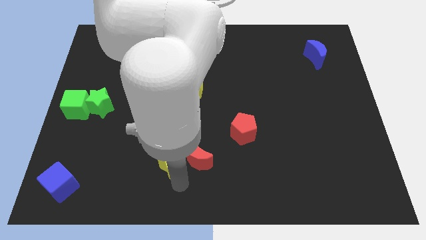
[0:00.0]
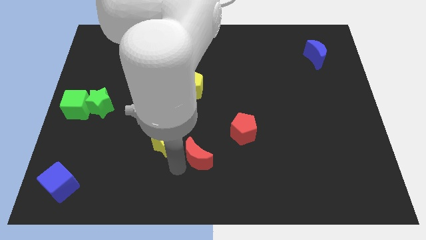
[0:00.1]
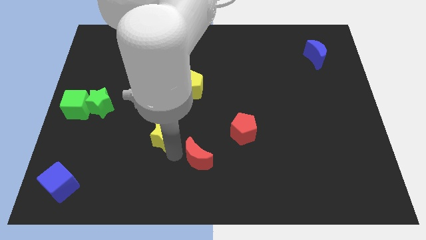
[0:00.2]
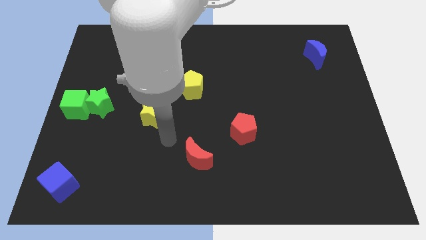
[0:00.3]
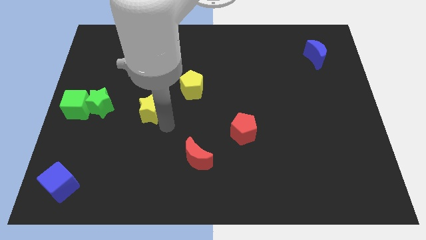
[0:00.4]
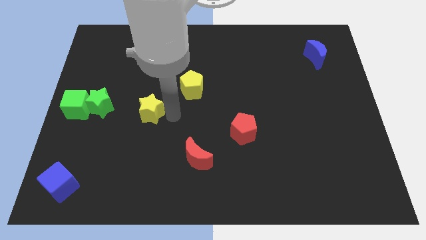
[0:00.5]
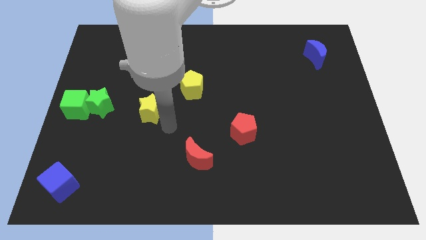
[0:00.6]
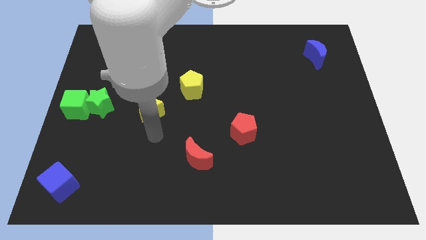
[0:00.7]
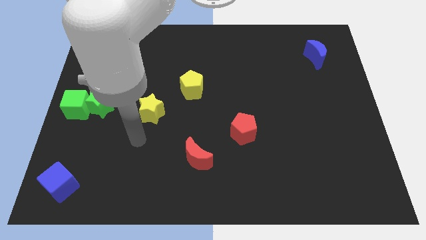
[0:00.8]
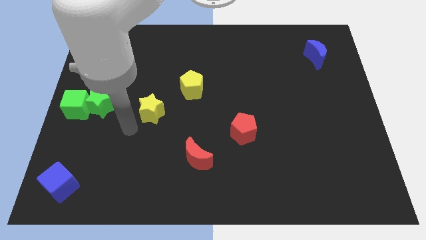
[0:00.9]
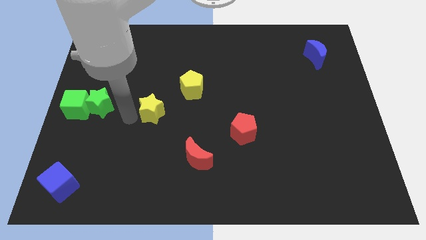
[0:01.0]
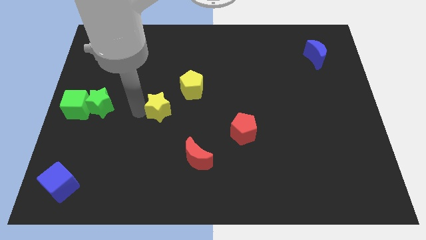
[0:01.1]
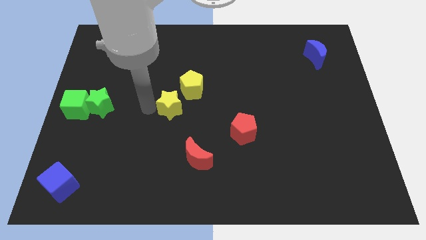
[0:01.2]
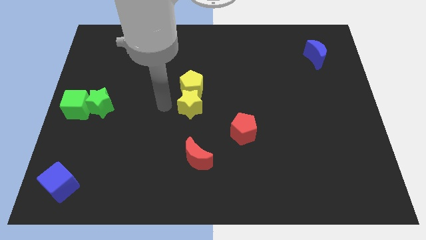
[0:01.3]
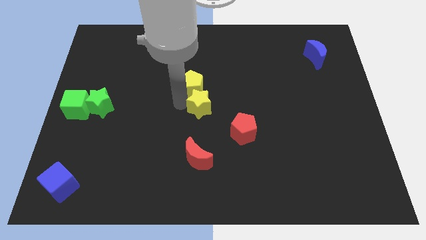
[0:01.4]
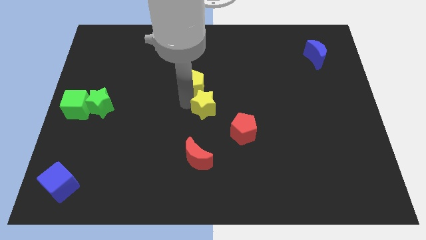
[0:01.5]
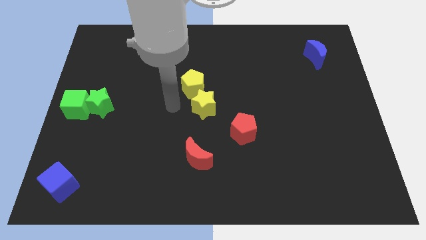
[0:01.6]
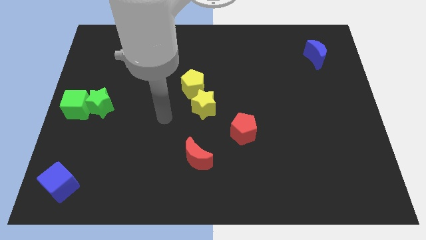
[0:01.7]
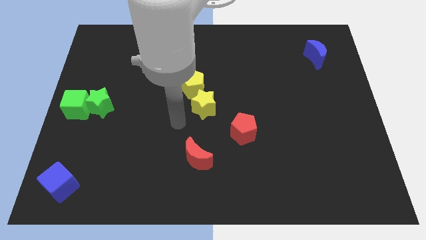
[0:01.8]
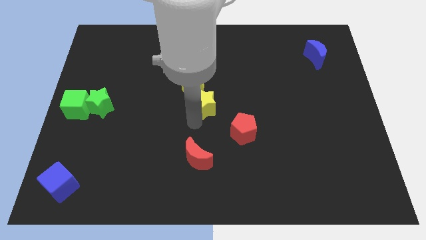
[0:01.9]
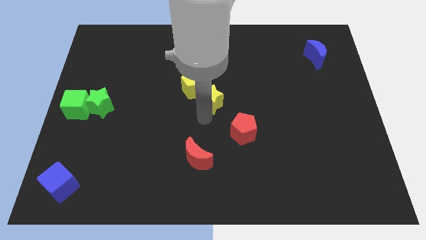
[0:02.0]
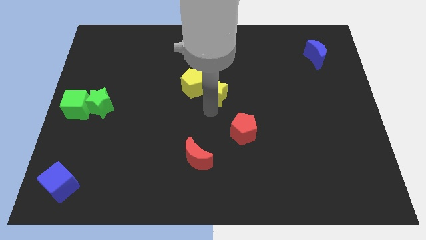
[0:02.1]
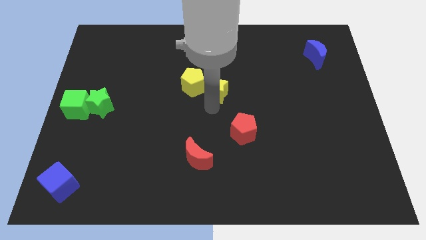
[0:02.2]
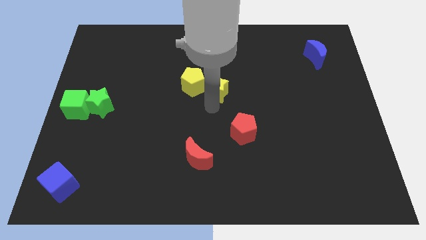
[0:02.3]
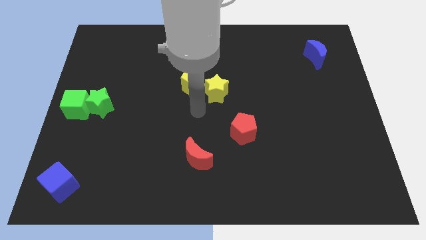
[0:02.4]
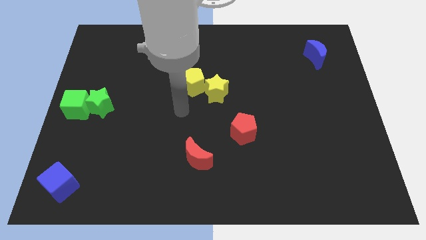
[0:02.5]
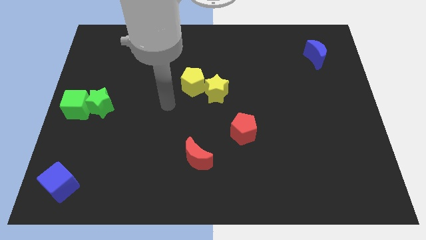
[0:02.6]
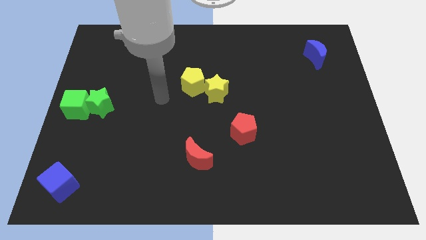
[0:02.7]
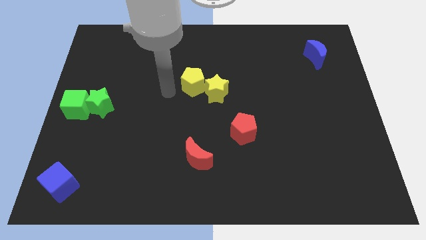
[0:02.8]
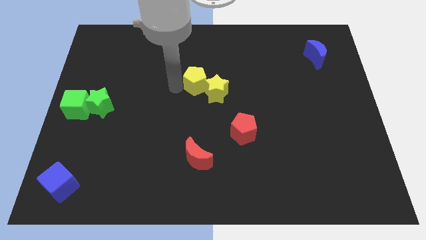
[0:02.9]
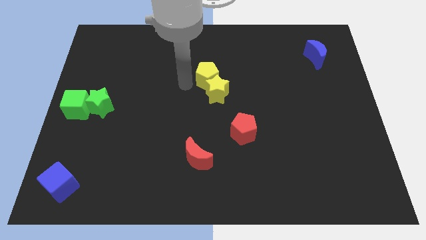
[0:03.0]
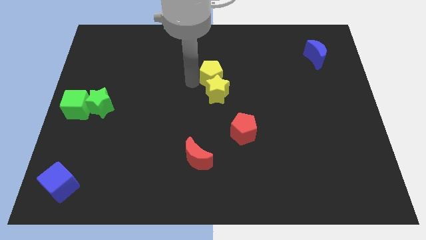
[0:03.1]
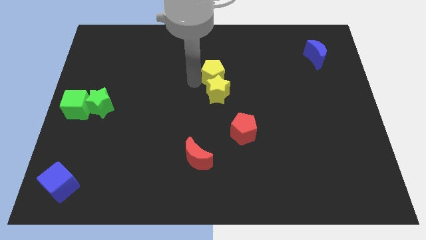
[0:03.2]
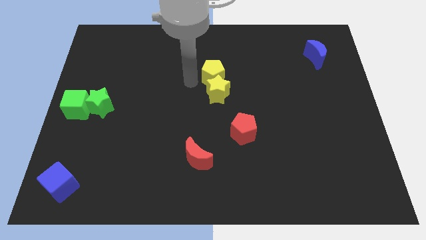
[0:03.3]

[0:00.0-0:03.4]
place the yellow blocks at the center of the board

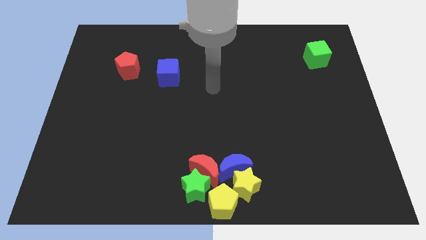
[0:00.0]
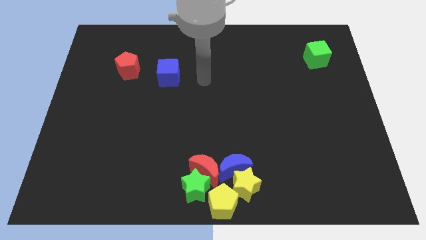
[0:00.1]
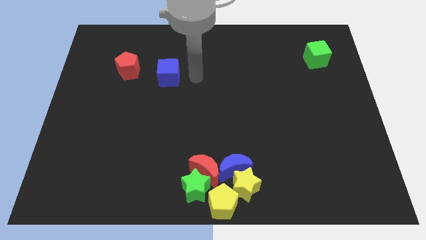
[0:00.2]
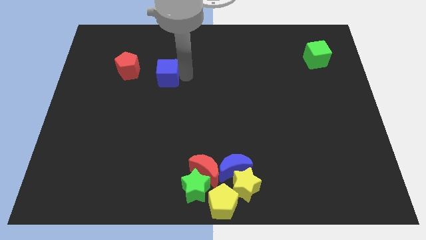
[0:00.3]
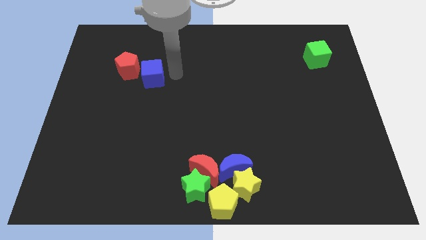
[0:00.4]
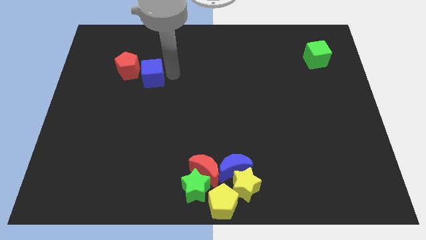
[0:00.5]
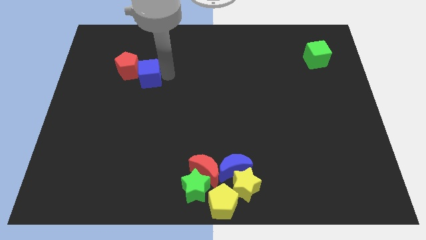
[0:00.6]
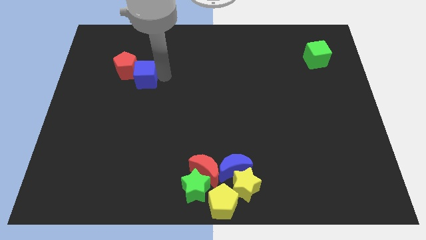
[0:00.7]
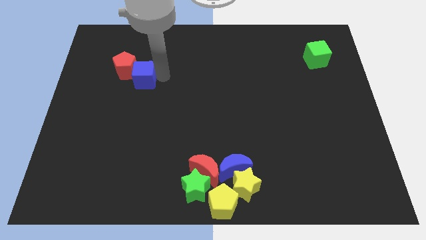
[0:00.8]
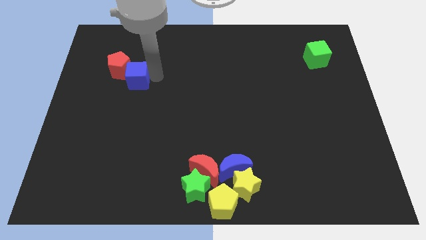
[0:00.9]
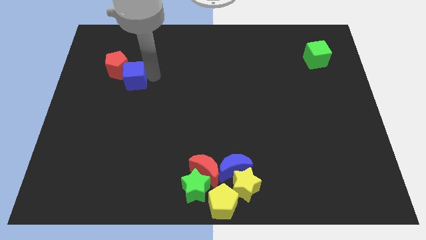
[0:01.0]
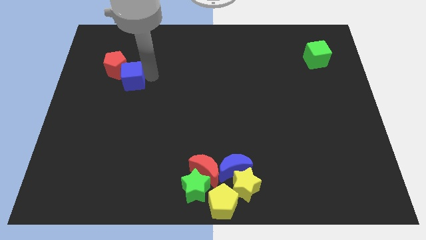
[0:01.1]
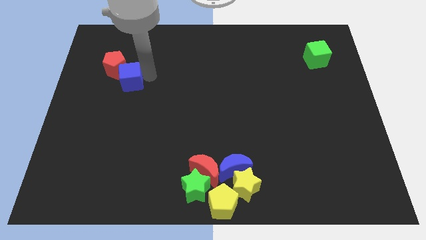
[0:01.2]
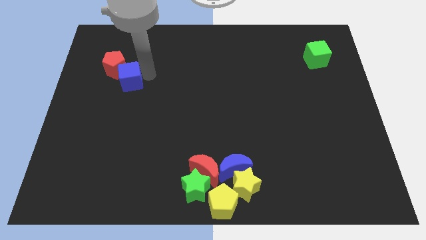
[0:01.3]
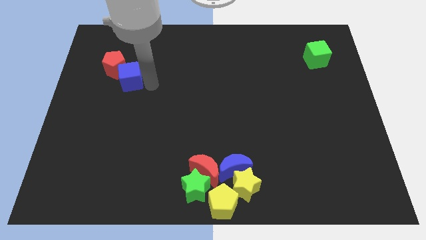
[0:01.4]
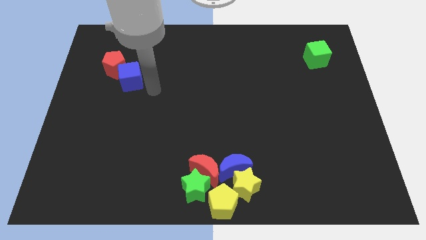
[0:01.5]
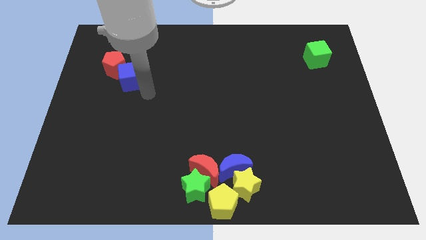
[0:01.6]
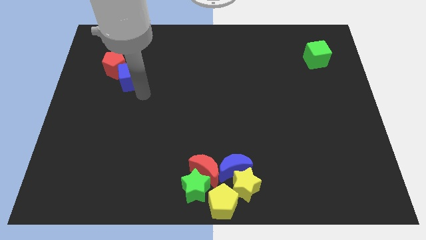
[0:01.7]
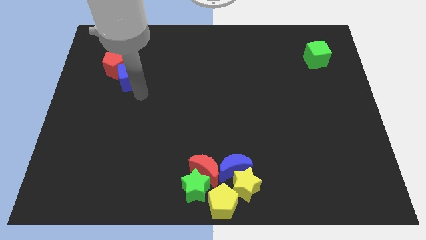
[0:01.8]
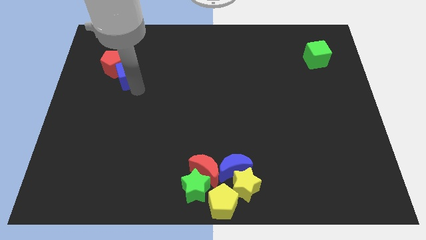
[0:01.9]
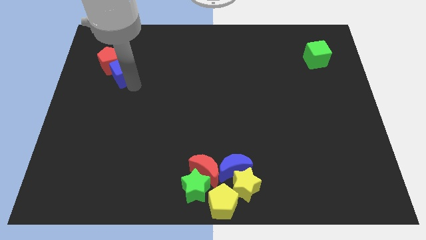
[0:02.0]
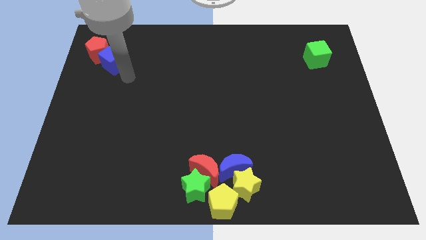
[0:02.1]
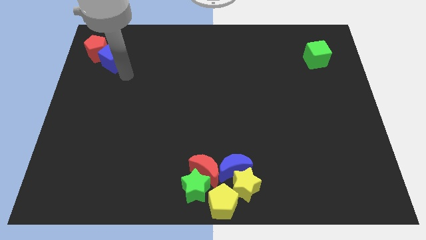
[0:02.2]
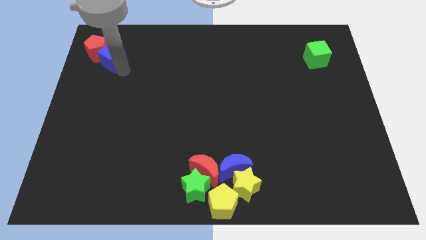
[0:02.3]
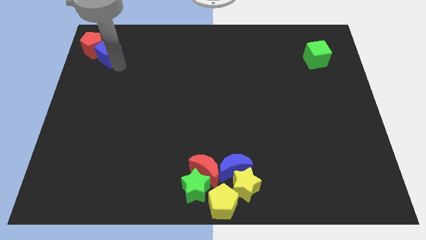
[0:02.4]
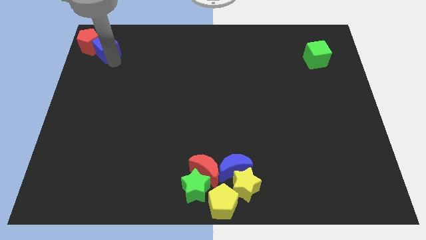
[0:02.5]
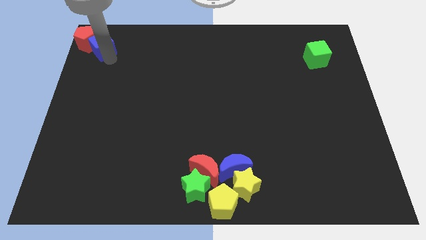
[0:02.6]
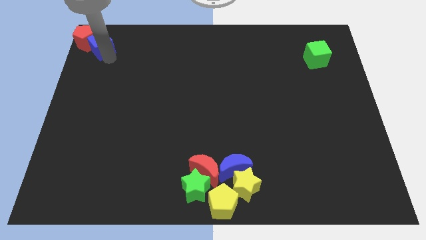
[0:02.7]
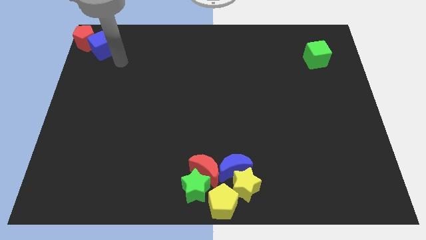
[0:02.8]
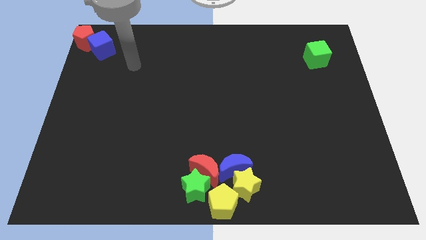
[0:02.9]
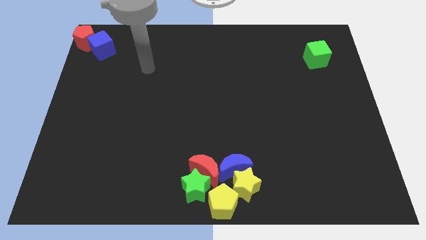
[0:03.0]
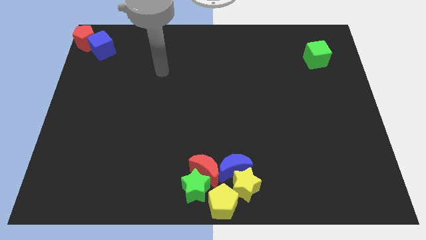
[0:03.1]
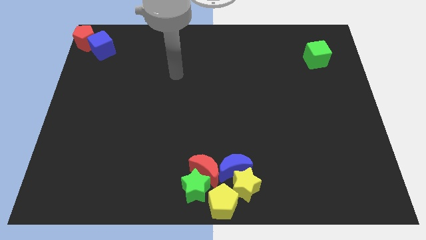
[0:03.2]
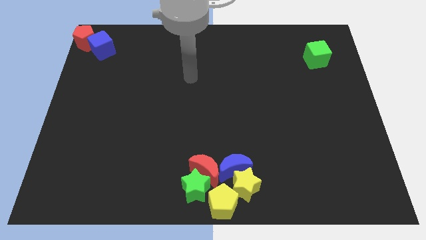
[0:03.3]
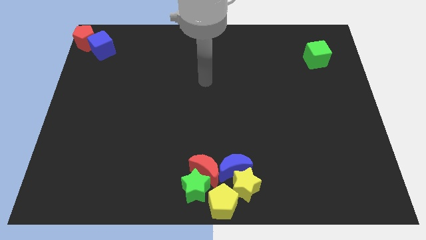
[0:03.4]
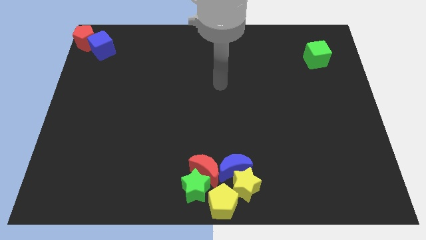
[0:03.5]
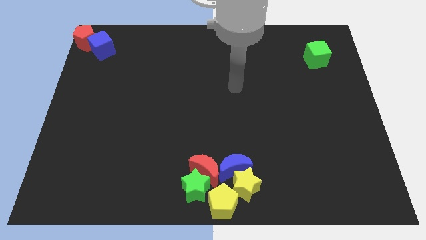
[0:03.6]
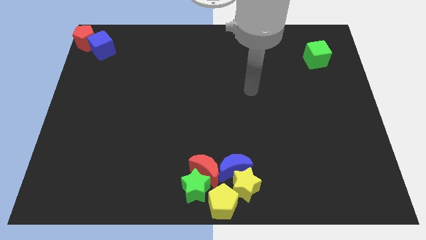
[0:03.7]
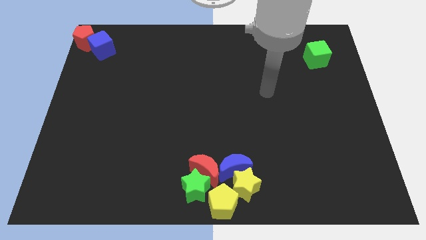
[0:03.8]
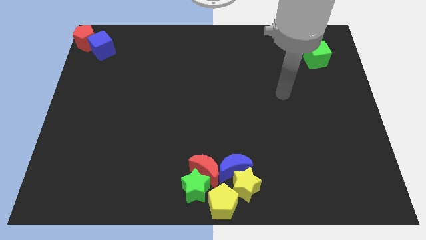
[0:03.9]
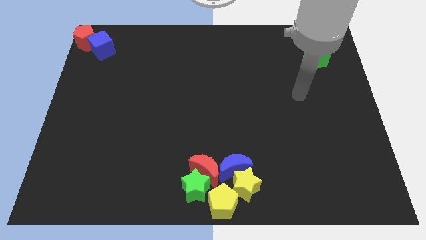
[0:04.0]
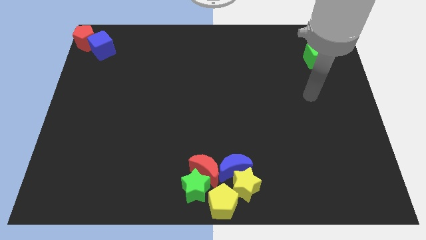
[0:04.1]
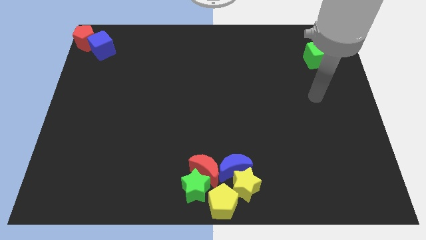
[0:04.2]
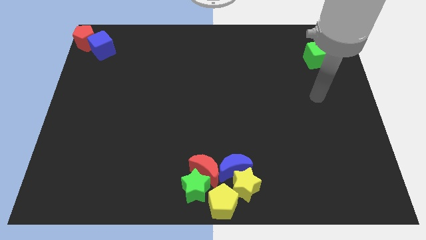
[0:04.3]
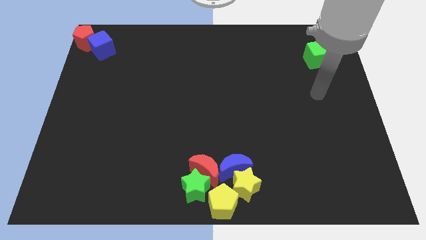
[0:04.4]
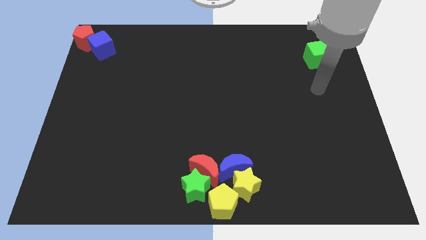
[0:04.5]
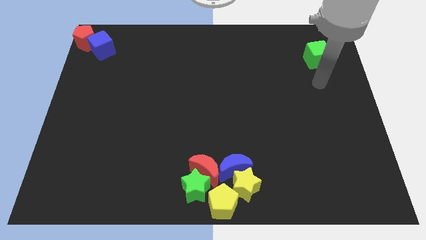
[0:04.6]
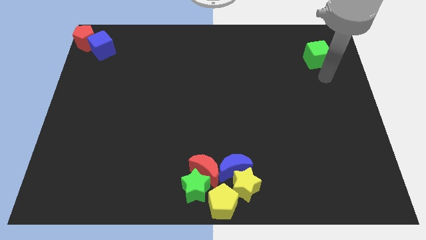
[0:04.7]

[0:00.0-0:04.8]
push the blue cube along with red pentagon to top left corner

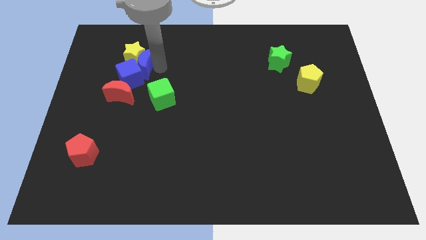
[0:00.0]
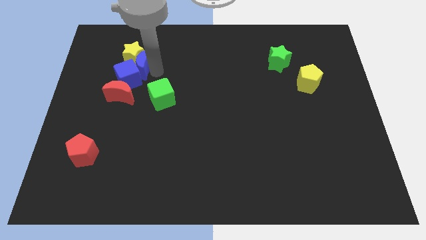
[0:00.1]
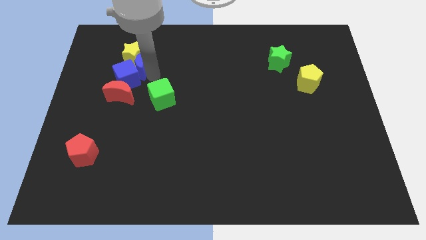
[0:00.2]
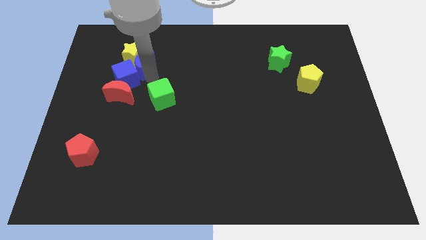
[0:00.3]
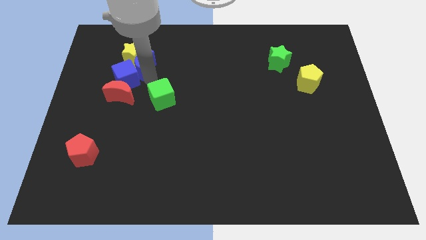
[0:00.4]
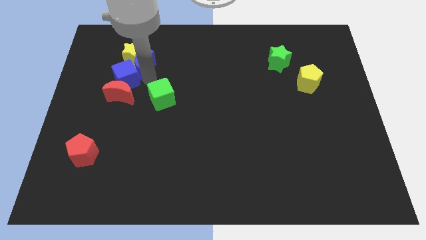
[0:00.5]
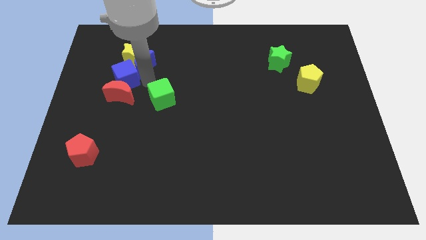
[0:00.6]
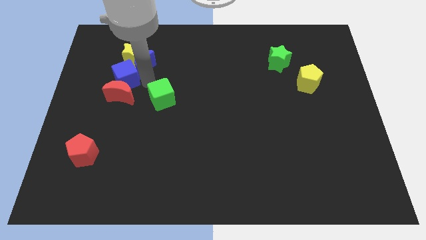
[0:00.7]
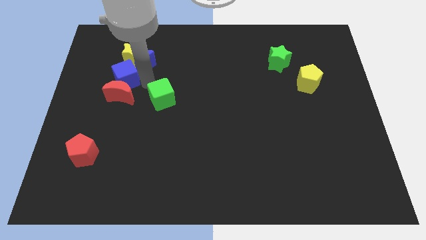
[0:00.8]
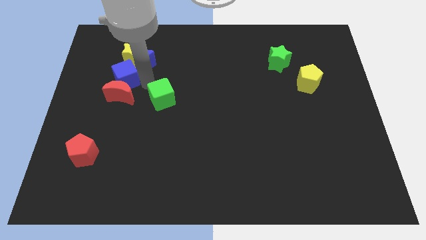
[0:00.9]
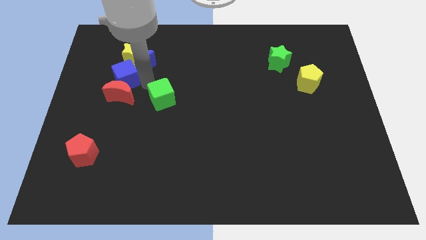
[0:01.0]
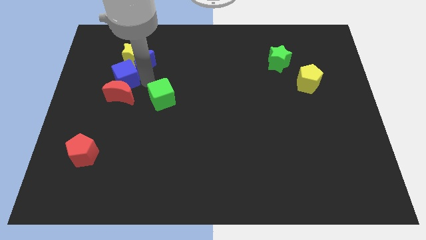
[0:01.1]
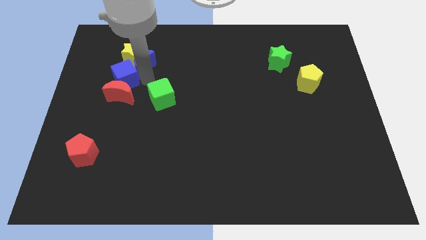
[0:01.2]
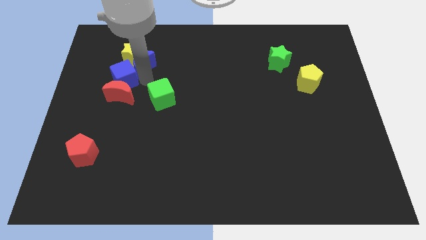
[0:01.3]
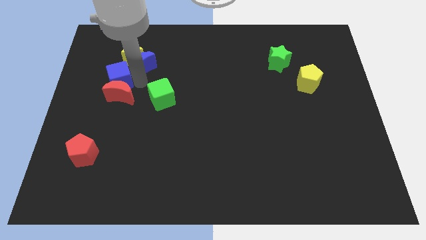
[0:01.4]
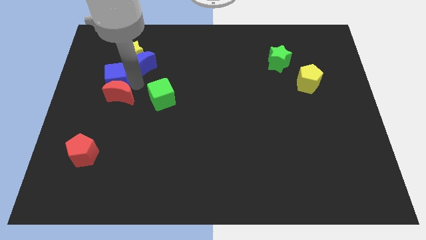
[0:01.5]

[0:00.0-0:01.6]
push blue cube above red crescent
